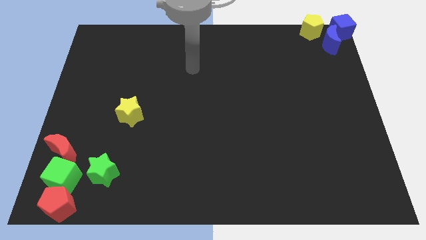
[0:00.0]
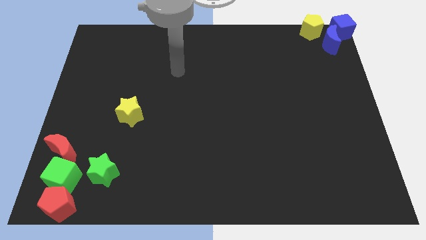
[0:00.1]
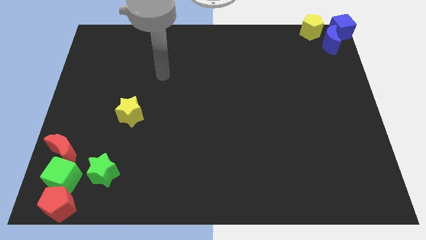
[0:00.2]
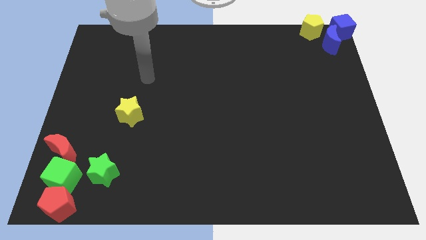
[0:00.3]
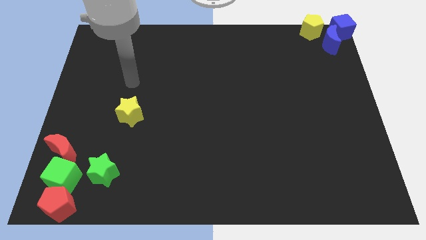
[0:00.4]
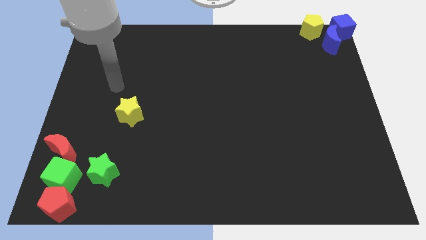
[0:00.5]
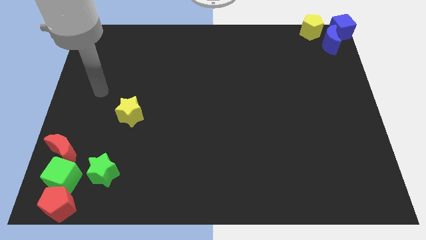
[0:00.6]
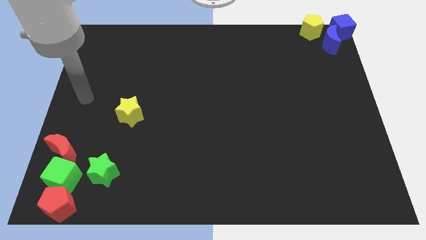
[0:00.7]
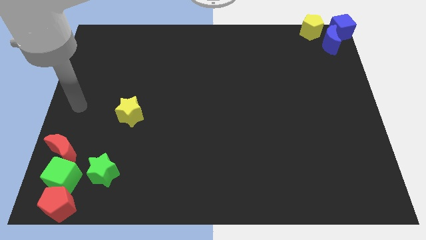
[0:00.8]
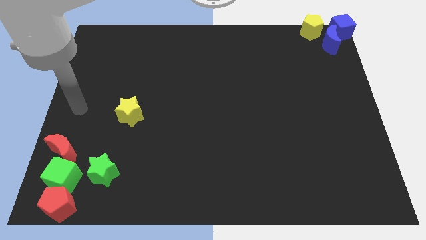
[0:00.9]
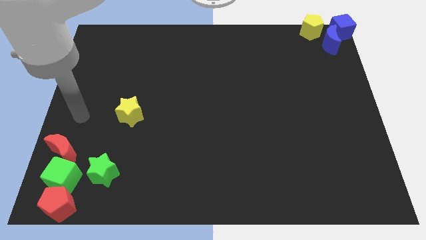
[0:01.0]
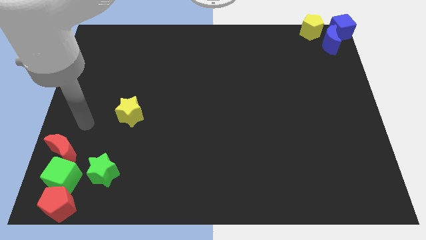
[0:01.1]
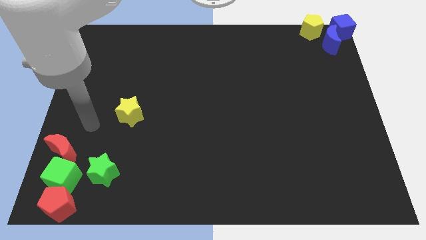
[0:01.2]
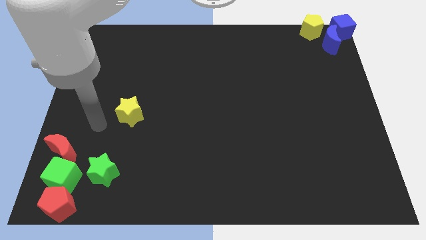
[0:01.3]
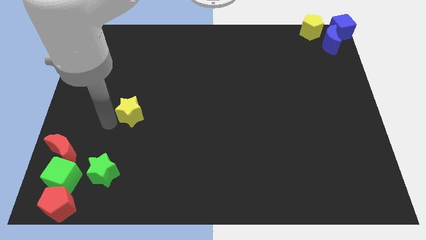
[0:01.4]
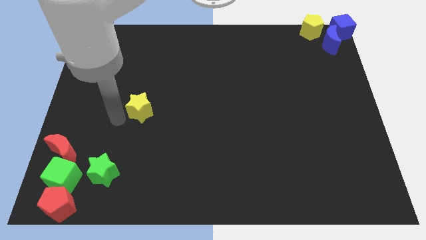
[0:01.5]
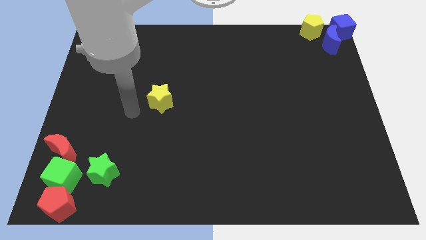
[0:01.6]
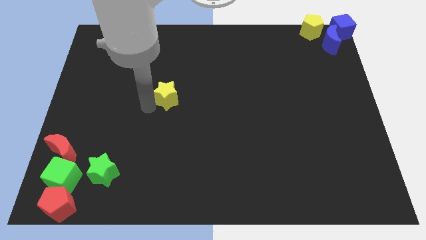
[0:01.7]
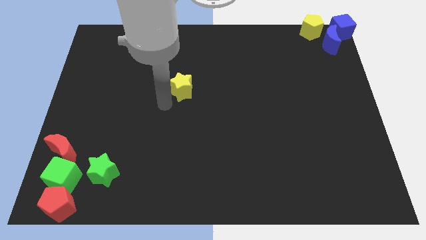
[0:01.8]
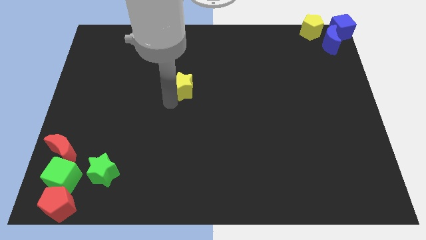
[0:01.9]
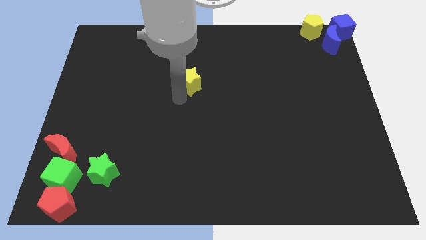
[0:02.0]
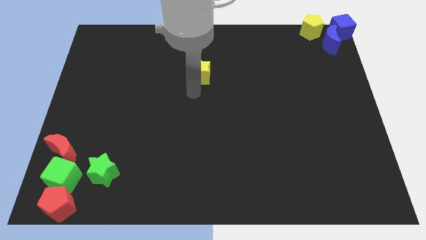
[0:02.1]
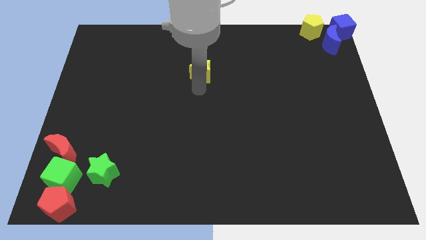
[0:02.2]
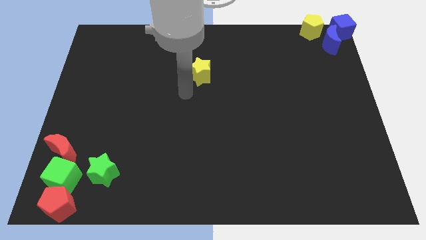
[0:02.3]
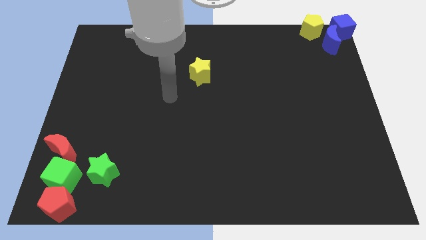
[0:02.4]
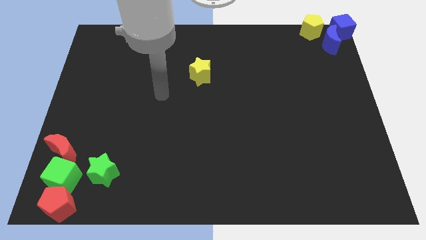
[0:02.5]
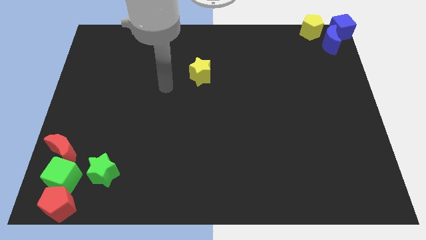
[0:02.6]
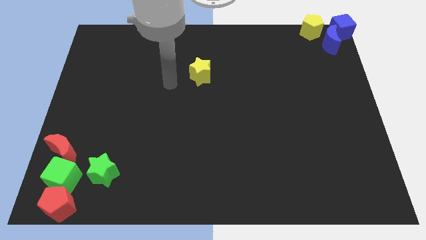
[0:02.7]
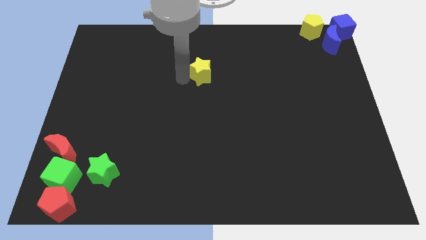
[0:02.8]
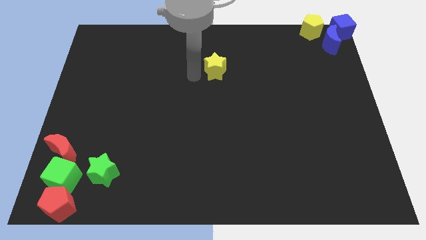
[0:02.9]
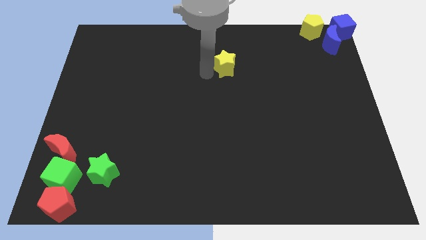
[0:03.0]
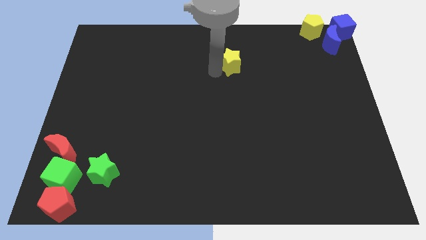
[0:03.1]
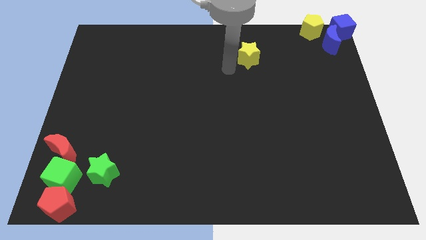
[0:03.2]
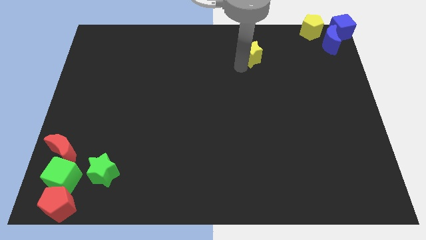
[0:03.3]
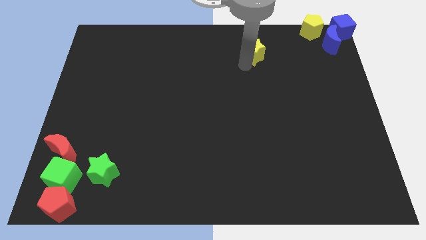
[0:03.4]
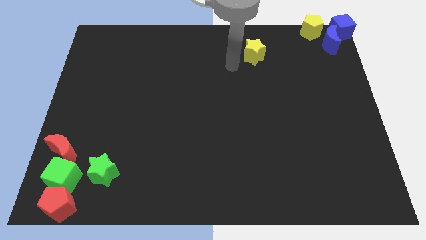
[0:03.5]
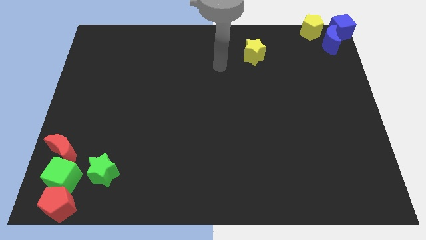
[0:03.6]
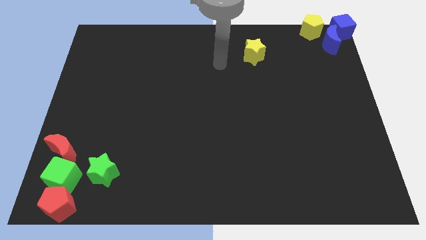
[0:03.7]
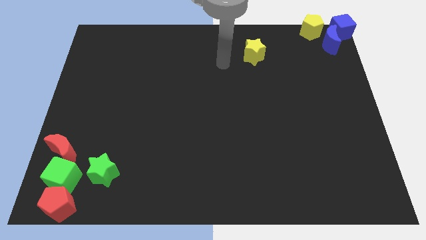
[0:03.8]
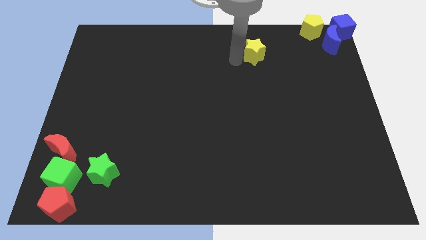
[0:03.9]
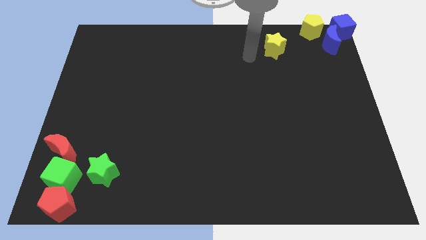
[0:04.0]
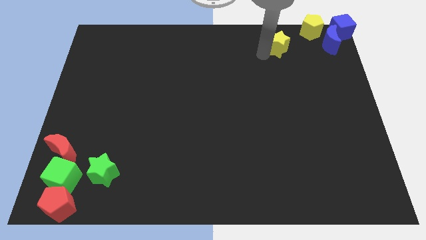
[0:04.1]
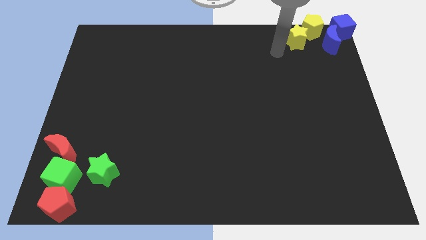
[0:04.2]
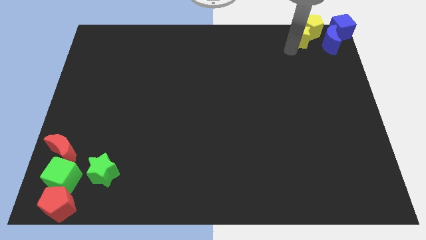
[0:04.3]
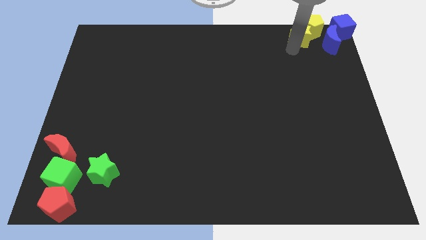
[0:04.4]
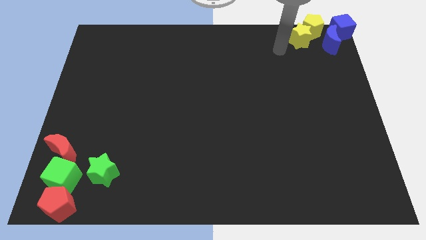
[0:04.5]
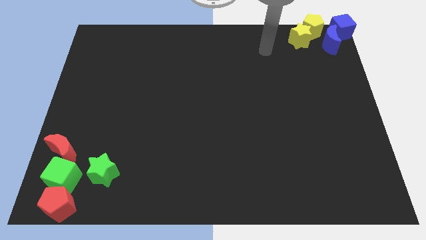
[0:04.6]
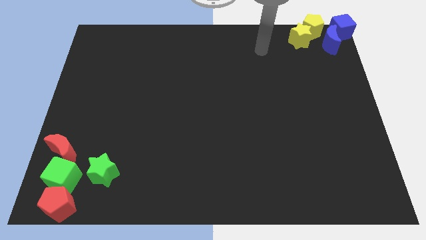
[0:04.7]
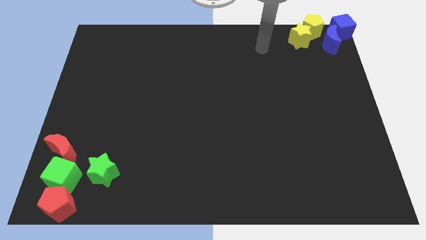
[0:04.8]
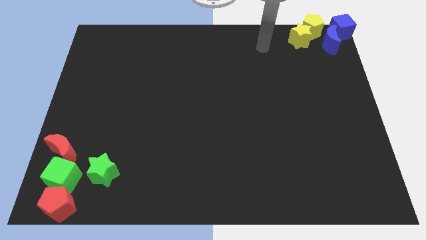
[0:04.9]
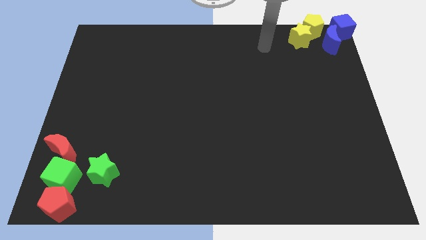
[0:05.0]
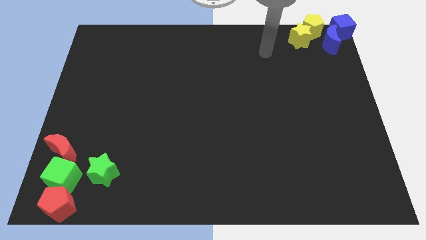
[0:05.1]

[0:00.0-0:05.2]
move yellow star into the yellow pentagon

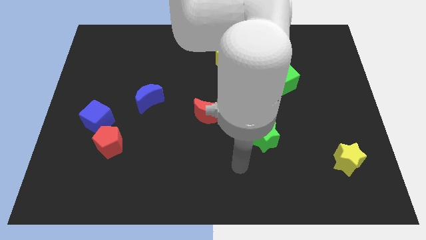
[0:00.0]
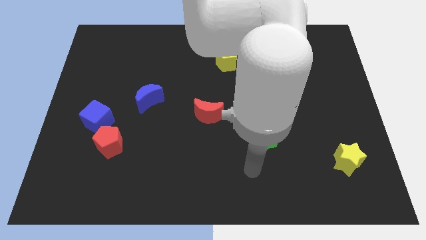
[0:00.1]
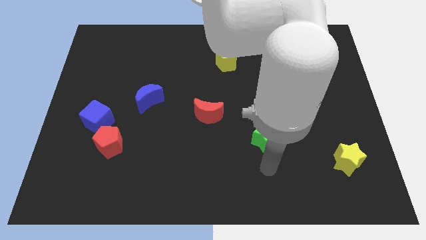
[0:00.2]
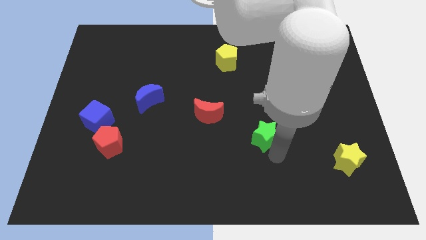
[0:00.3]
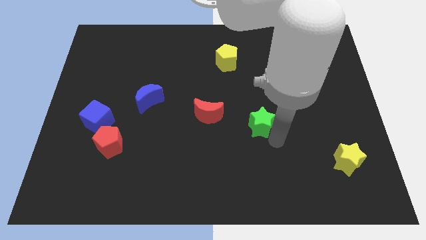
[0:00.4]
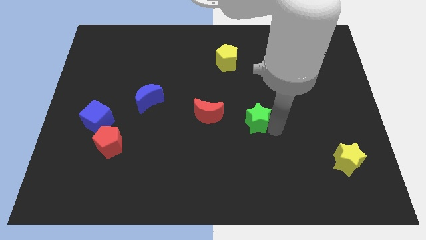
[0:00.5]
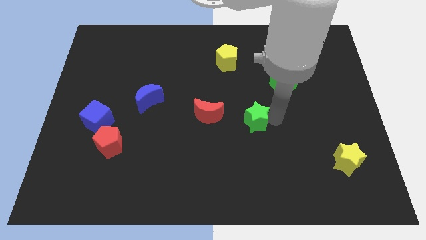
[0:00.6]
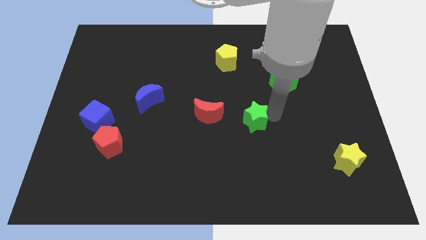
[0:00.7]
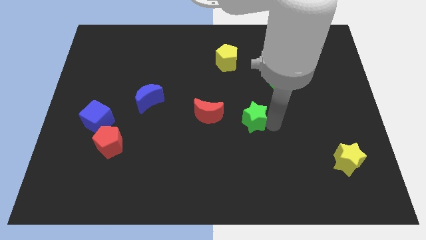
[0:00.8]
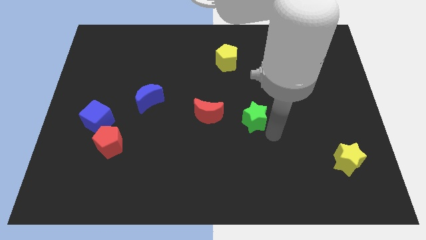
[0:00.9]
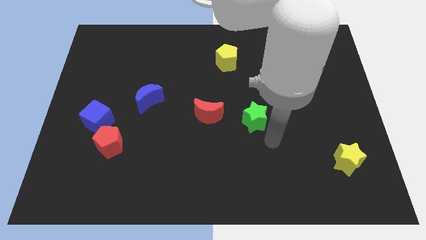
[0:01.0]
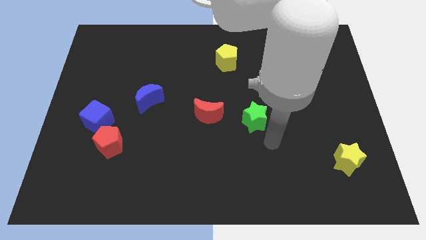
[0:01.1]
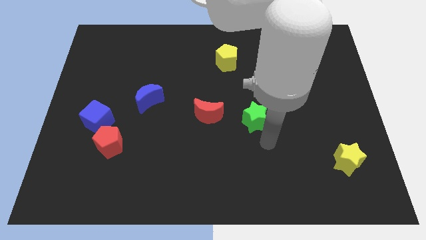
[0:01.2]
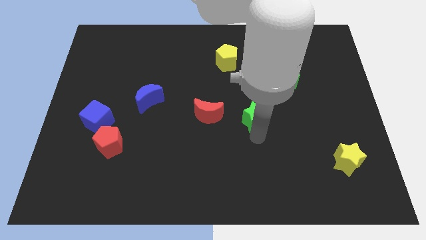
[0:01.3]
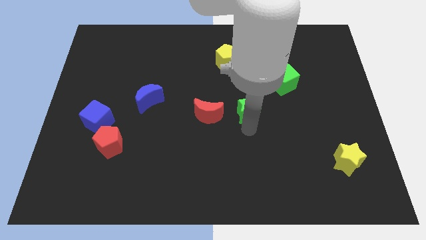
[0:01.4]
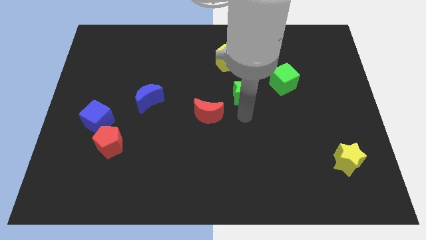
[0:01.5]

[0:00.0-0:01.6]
place the green star to the right of the red crescent

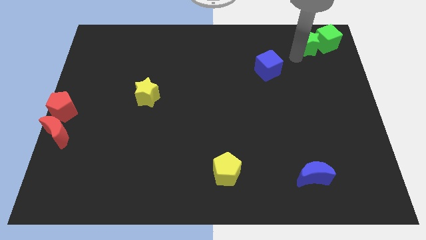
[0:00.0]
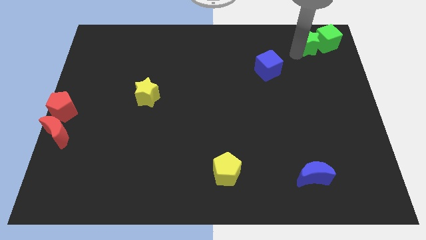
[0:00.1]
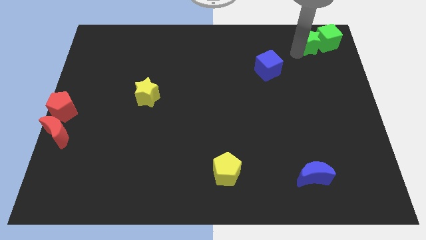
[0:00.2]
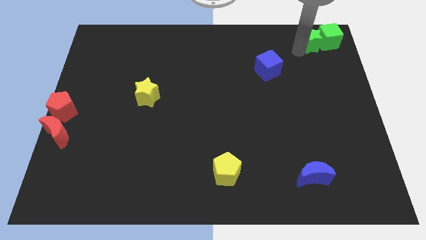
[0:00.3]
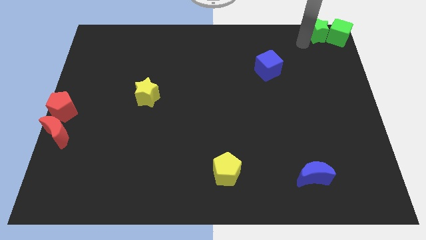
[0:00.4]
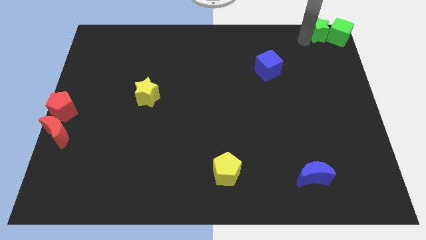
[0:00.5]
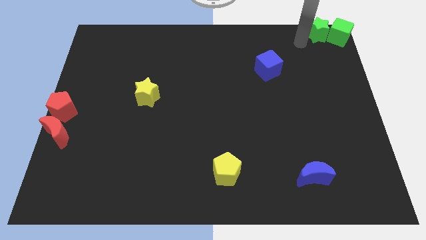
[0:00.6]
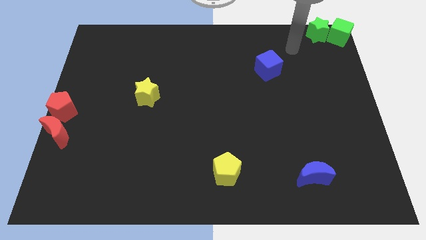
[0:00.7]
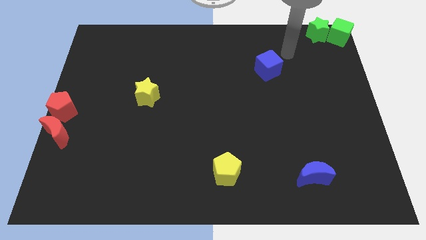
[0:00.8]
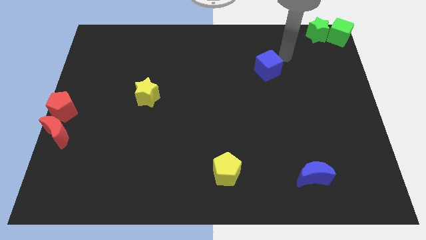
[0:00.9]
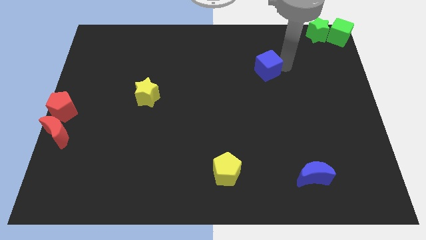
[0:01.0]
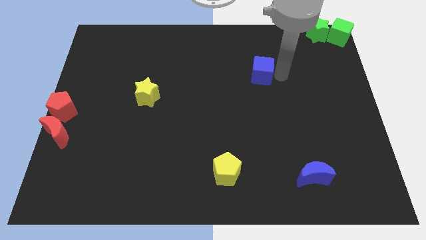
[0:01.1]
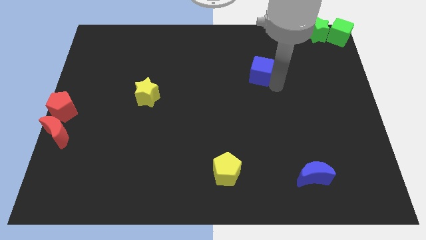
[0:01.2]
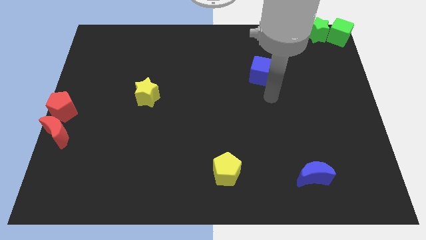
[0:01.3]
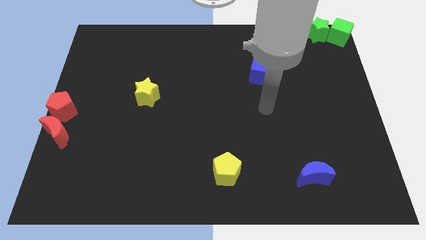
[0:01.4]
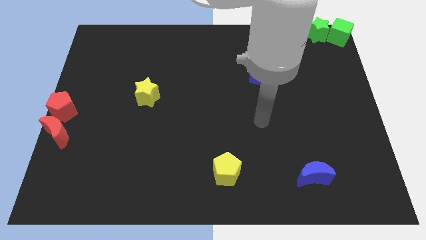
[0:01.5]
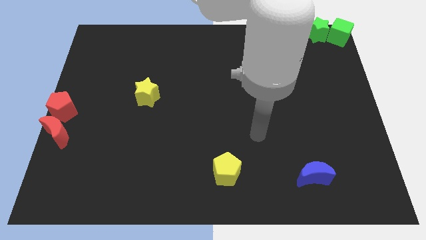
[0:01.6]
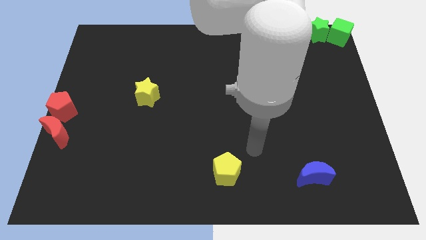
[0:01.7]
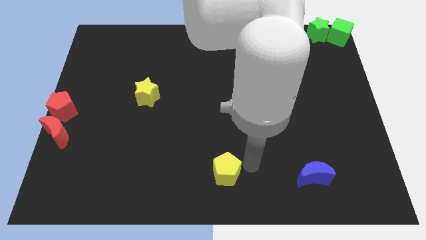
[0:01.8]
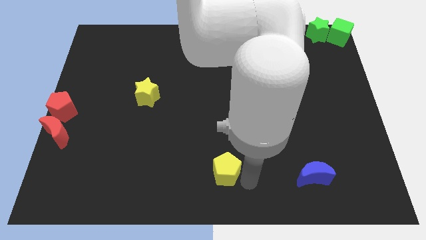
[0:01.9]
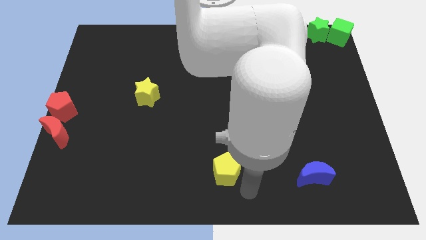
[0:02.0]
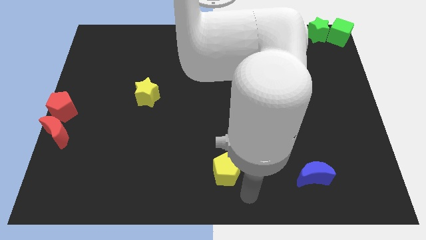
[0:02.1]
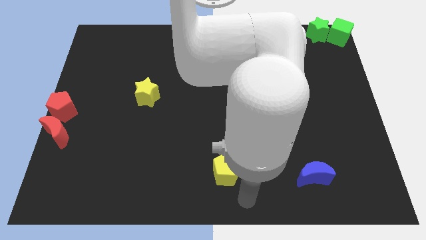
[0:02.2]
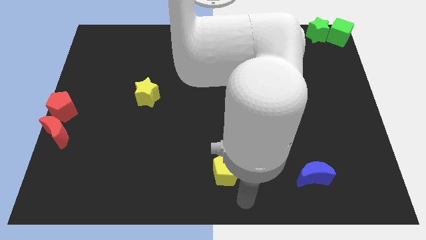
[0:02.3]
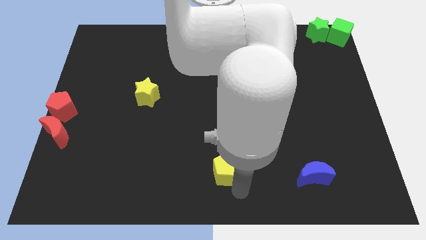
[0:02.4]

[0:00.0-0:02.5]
touch the bottom right side of the yellow pentagon
